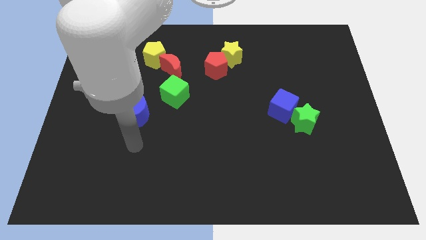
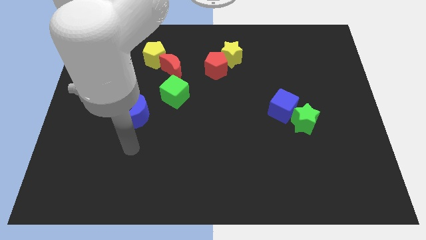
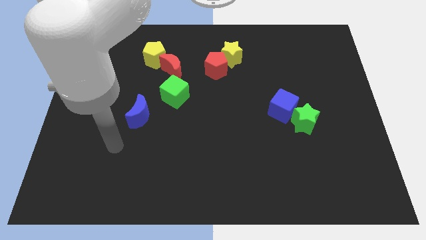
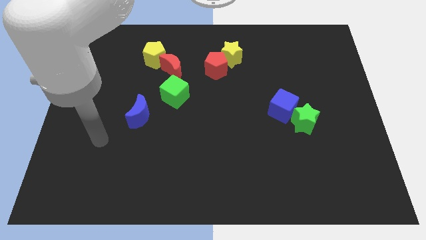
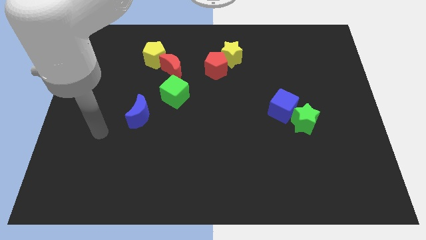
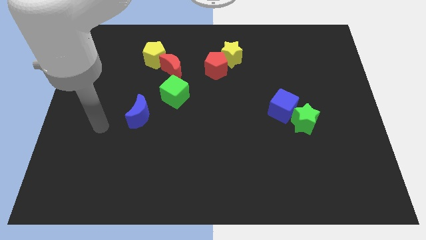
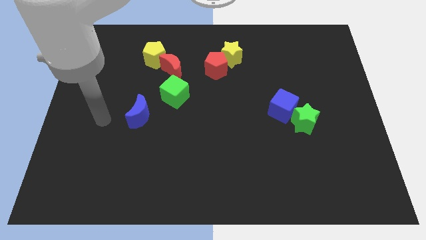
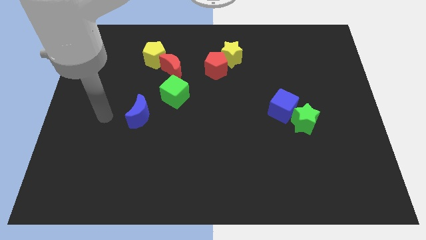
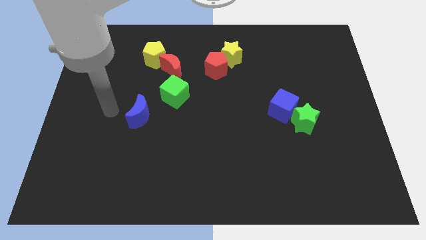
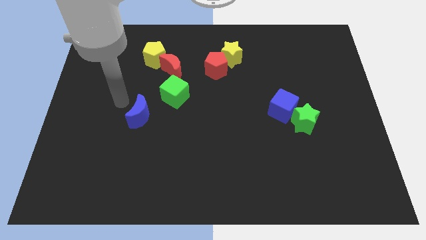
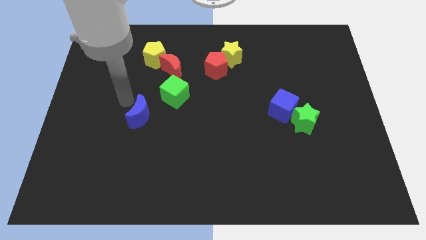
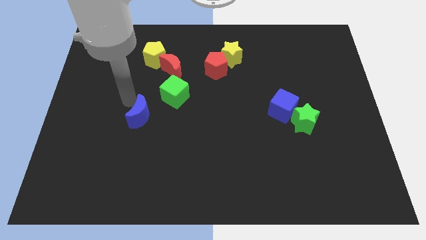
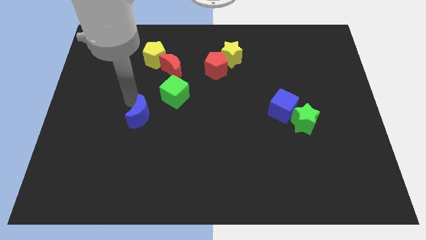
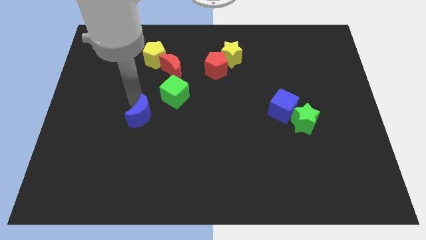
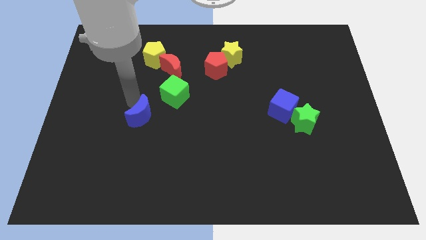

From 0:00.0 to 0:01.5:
slightly touch the left side of the blue crescent

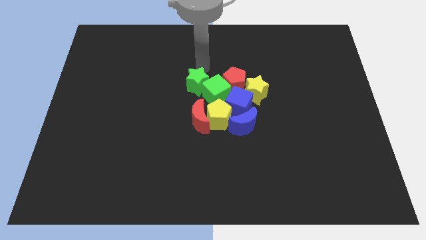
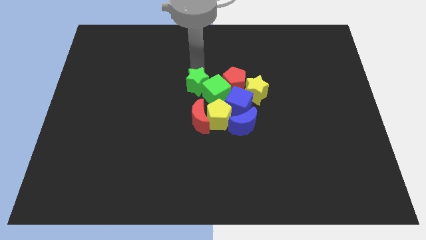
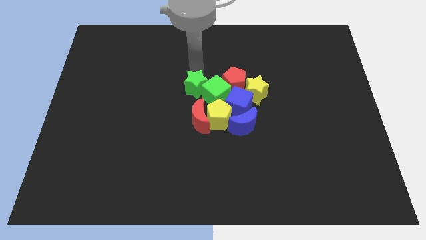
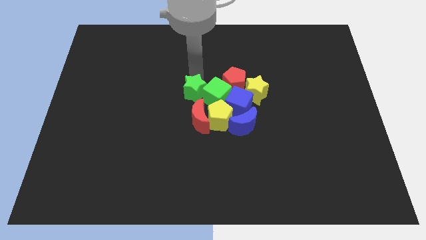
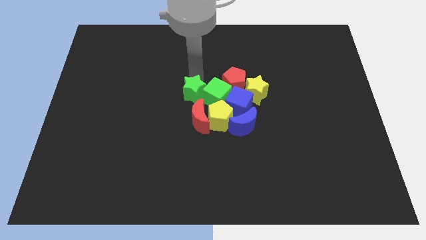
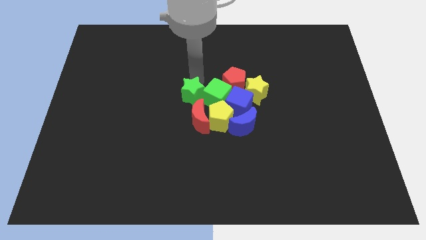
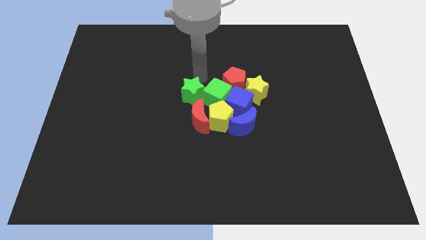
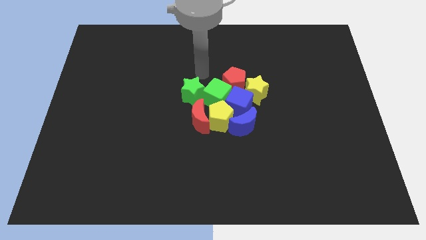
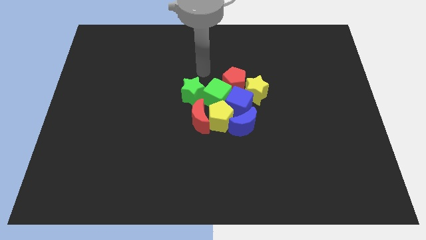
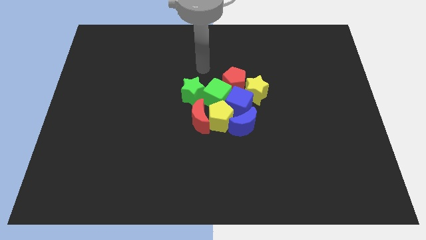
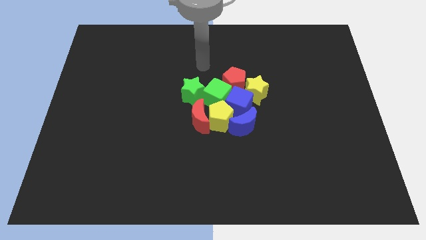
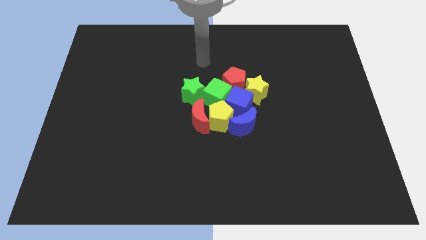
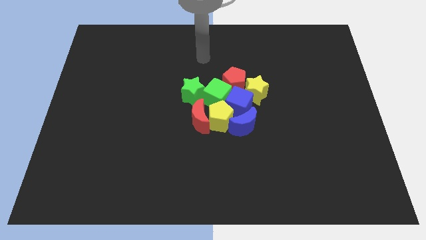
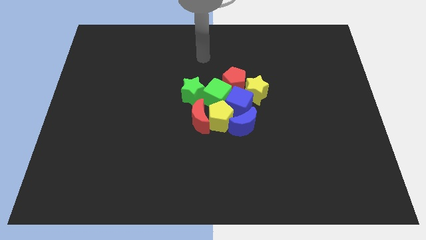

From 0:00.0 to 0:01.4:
move the green star to the bottom to make the group

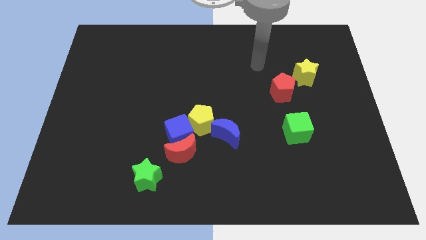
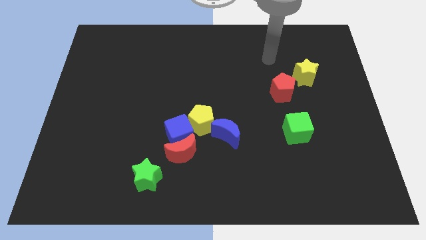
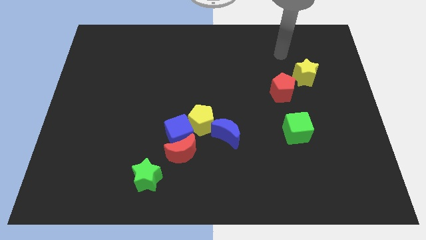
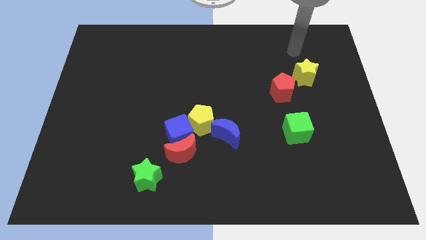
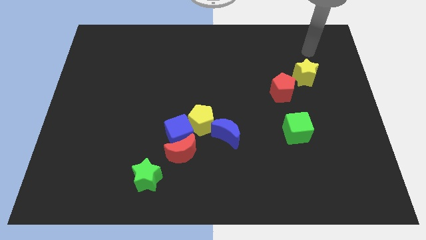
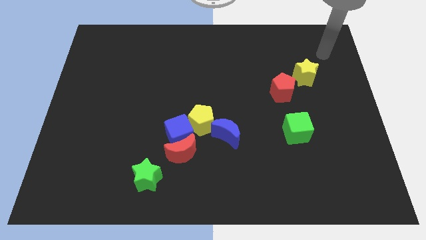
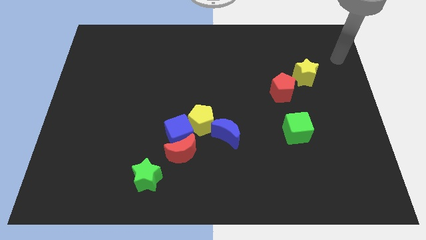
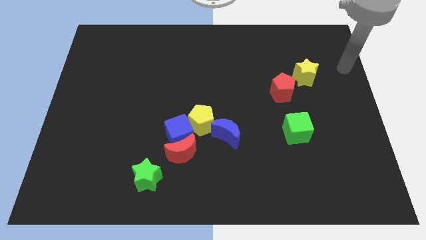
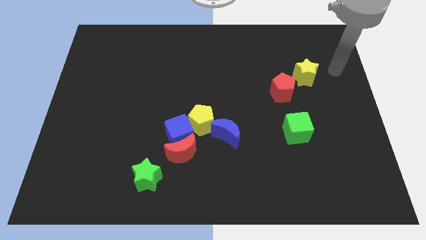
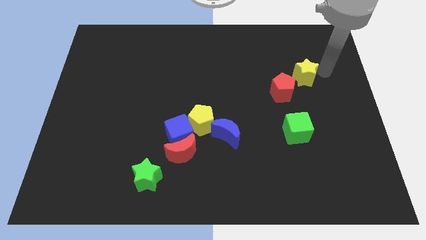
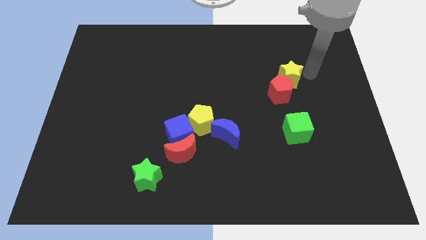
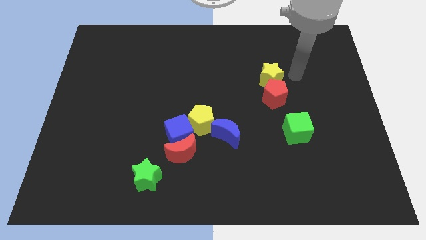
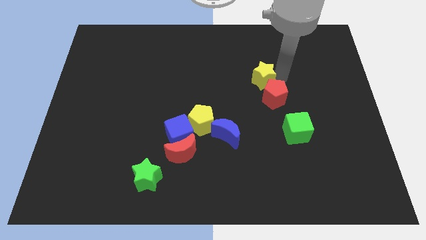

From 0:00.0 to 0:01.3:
place yellow star to the top of red pentagon

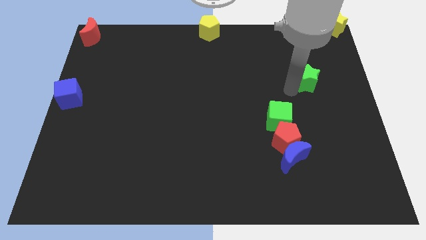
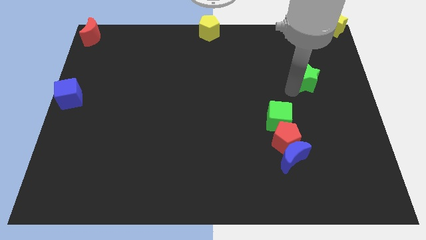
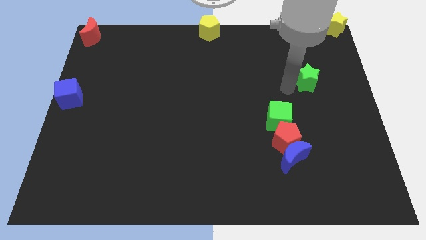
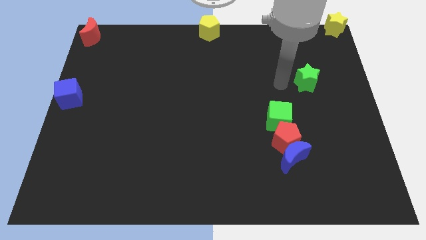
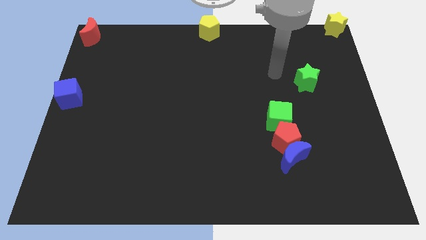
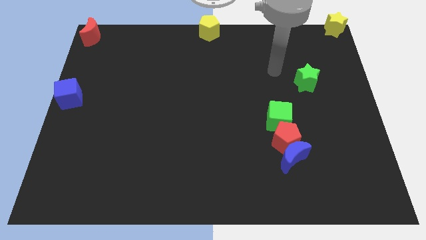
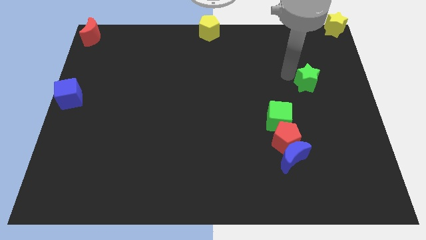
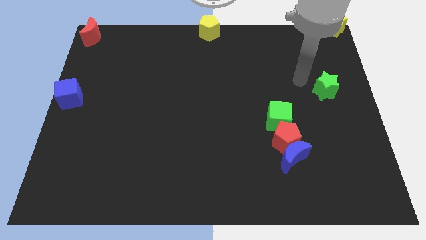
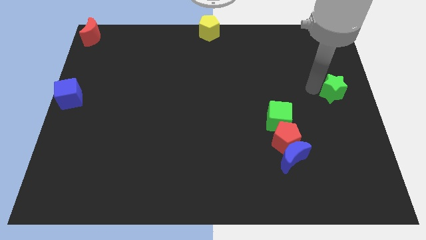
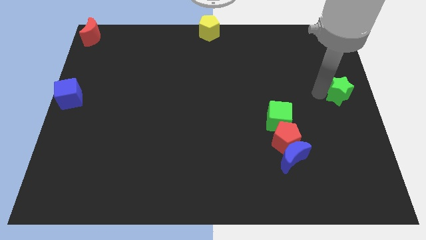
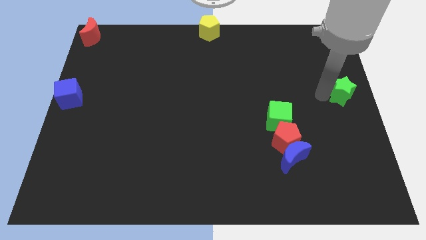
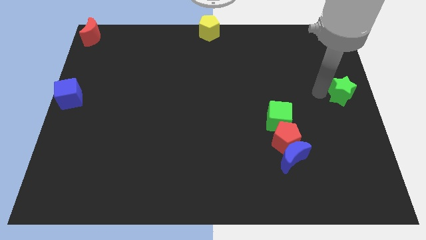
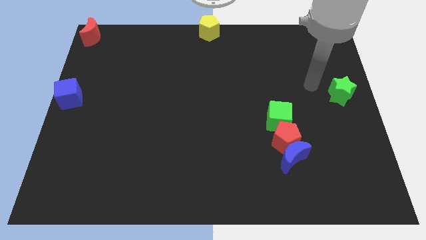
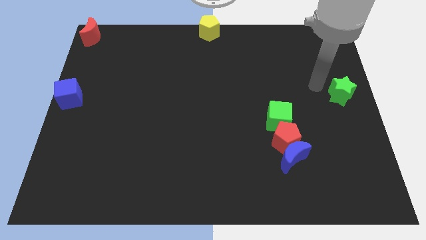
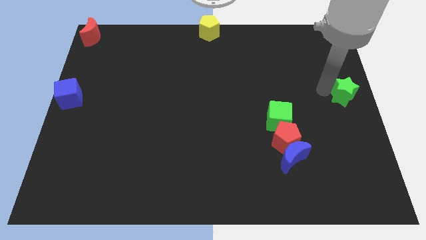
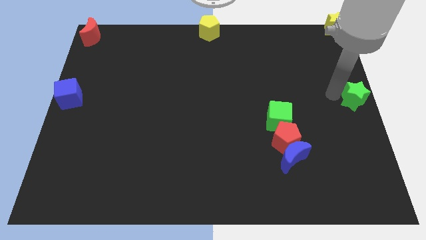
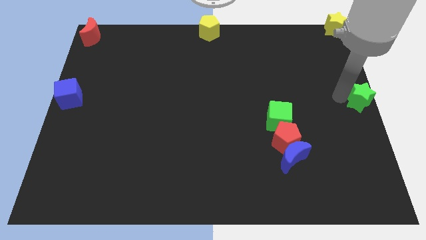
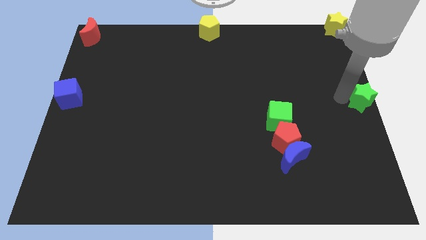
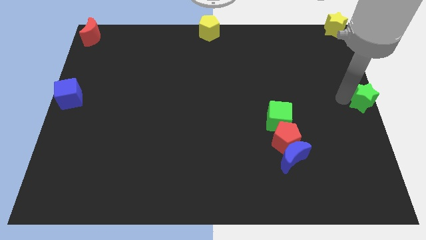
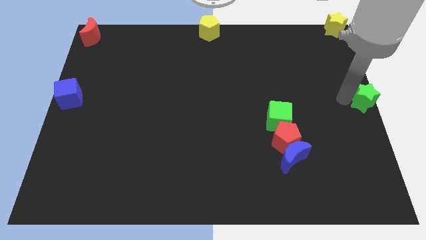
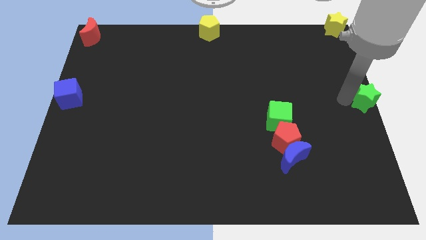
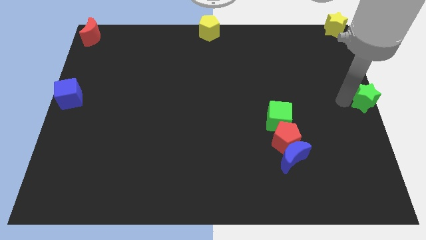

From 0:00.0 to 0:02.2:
bring the green star at the center right corner of the board

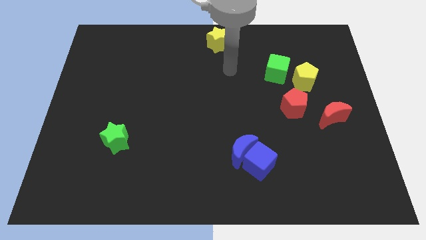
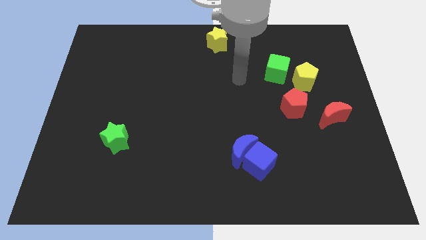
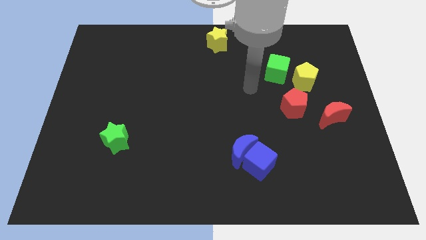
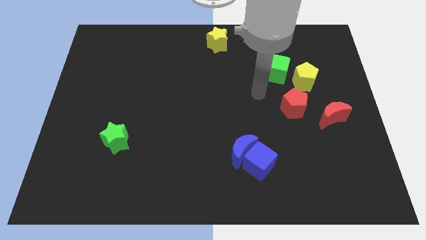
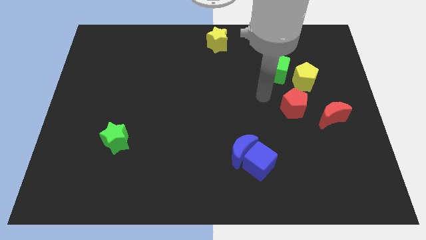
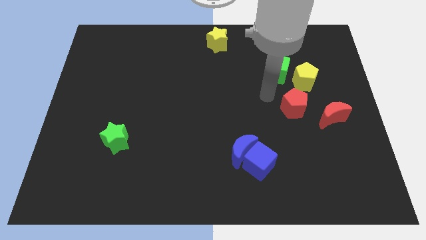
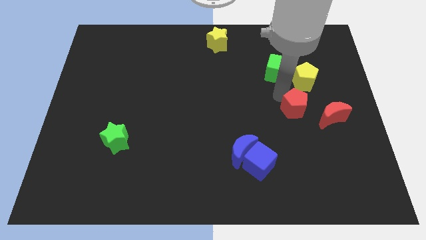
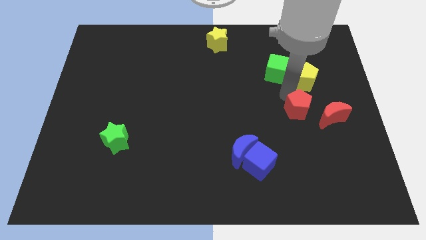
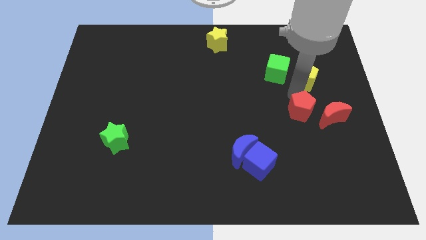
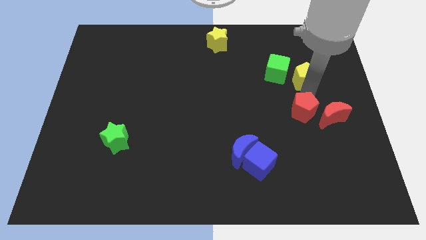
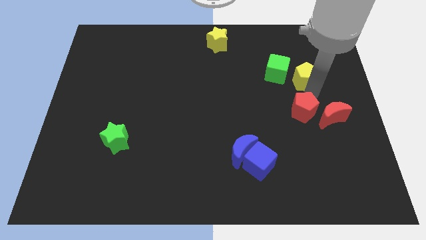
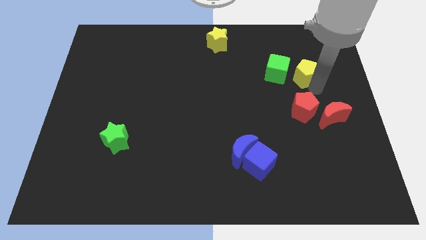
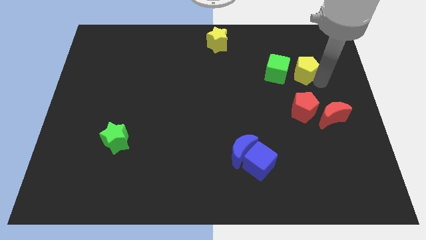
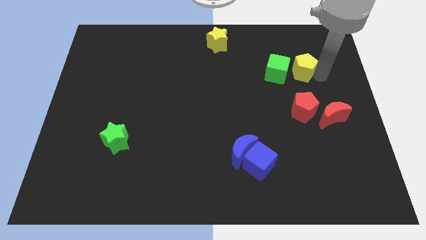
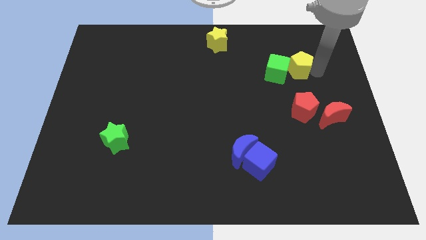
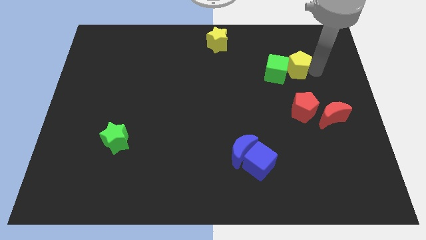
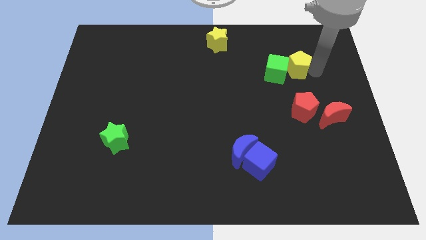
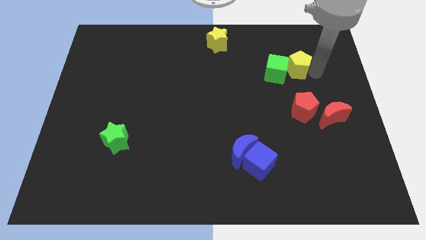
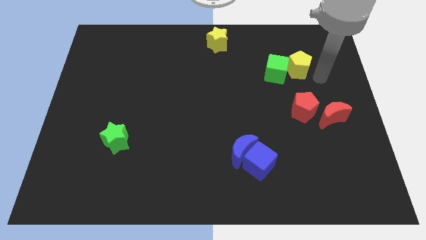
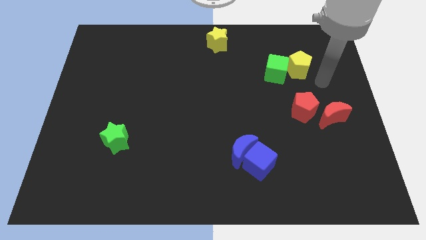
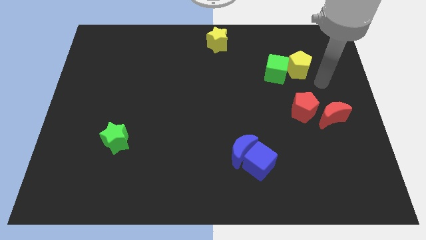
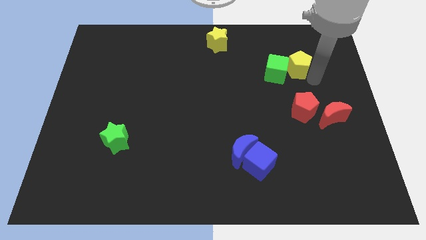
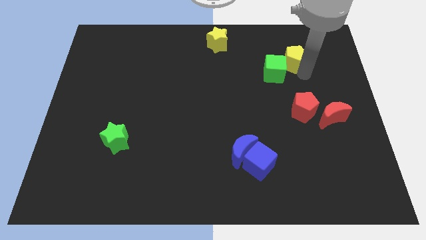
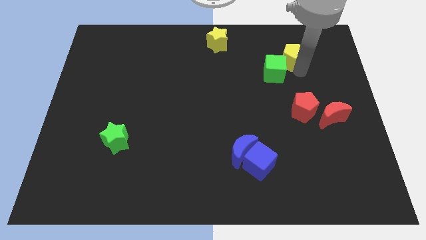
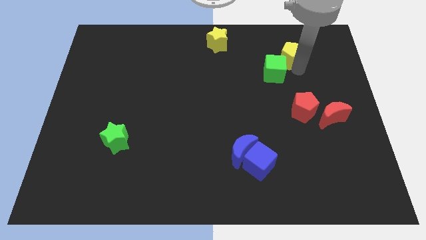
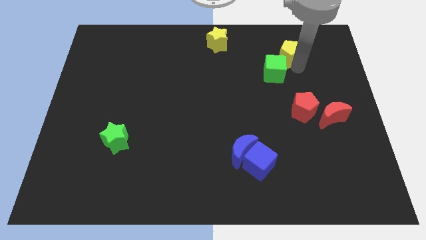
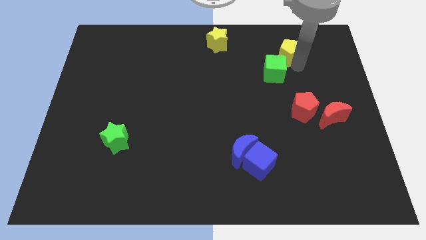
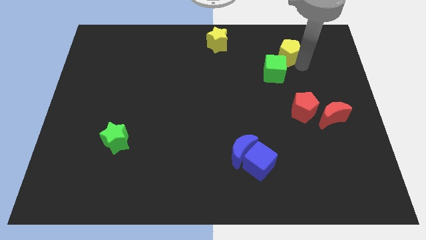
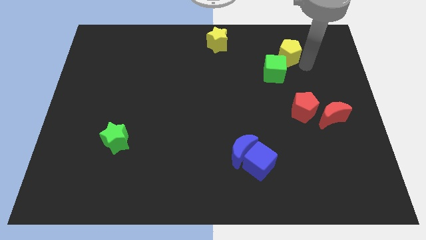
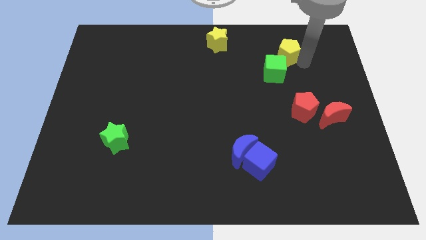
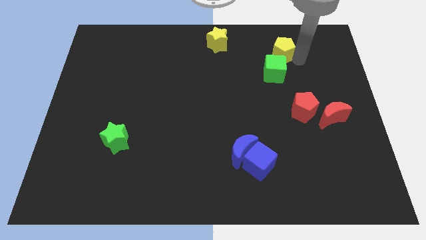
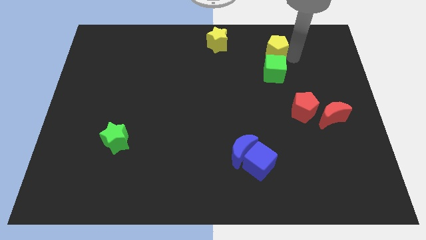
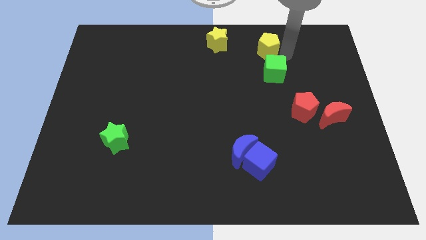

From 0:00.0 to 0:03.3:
place the yellow pentagon above the green cube
